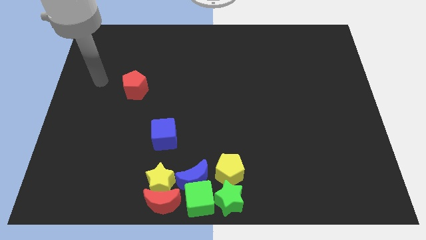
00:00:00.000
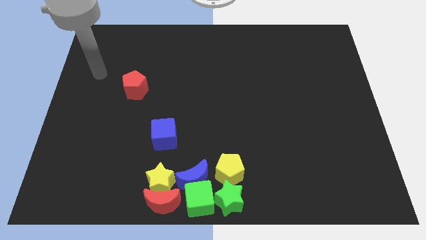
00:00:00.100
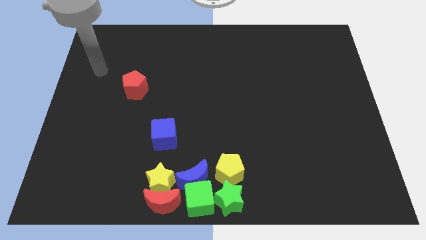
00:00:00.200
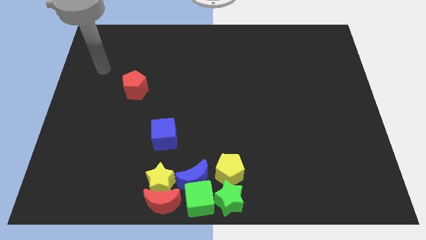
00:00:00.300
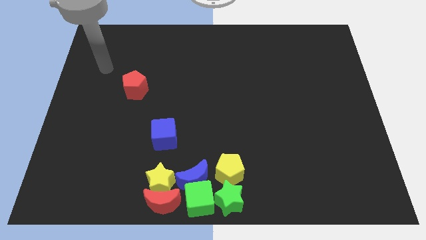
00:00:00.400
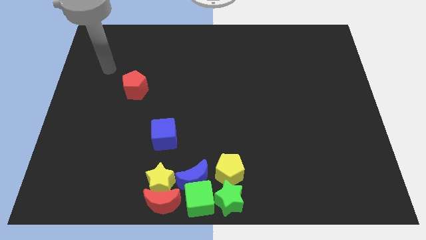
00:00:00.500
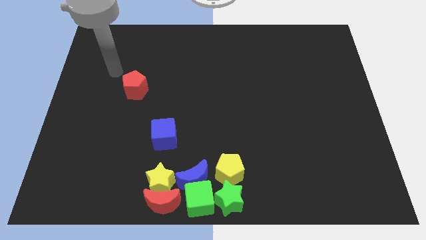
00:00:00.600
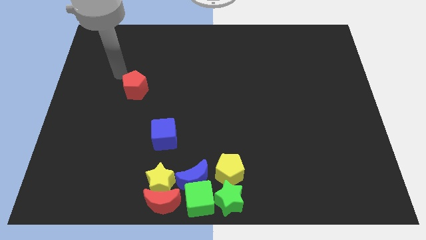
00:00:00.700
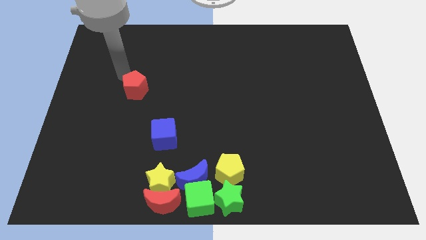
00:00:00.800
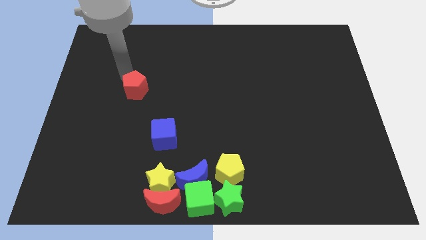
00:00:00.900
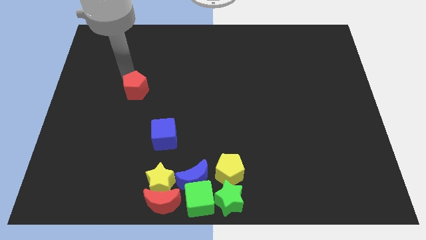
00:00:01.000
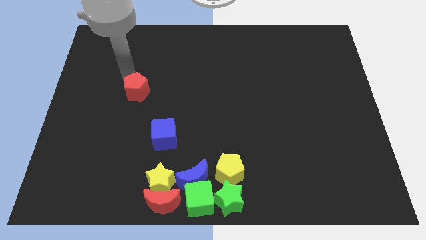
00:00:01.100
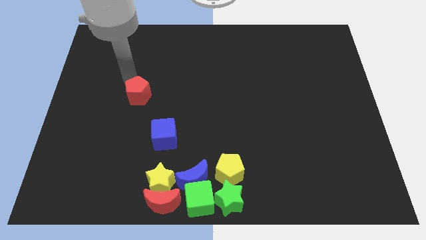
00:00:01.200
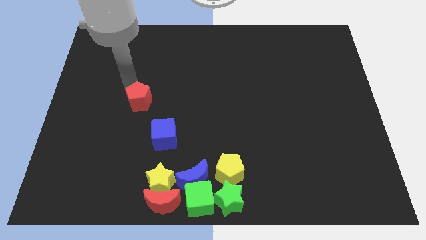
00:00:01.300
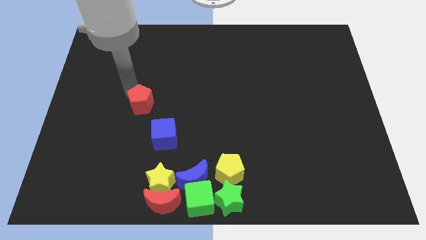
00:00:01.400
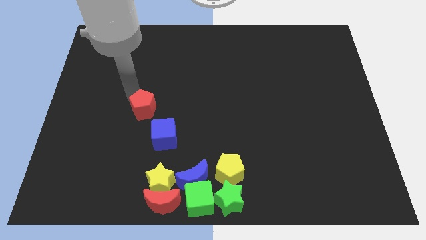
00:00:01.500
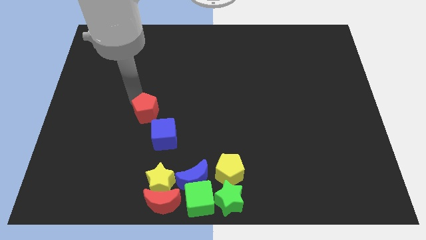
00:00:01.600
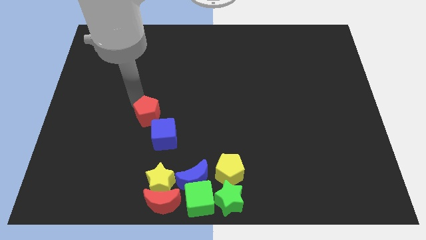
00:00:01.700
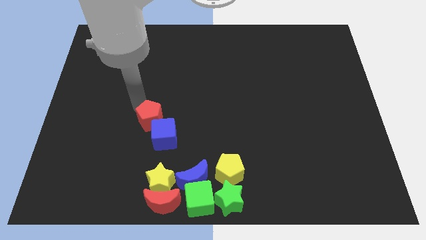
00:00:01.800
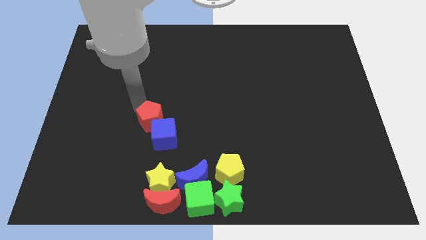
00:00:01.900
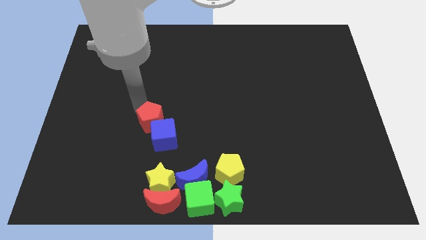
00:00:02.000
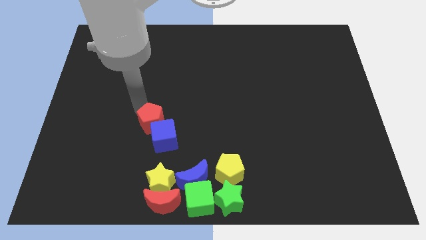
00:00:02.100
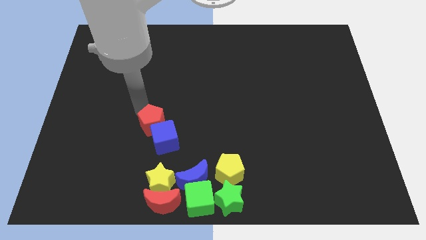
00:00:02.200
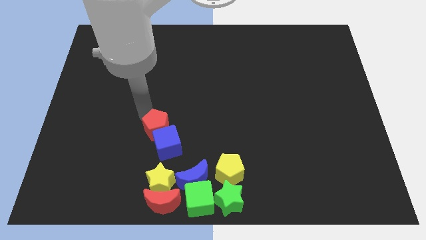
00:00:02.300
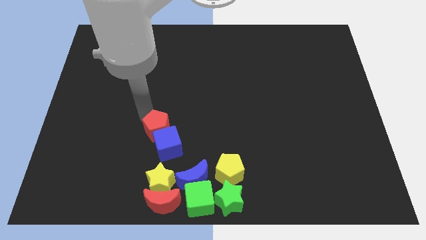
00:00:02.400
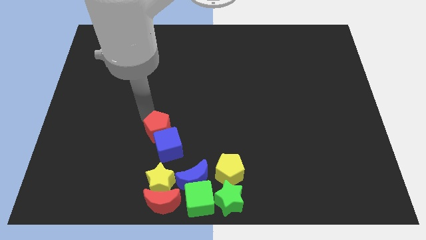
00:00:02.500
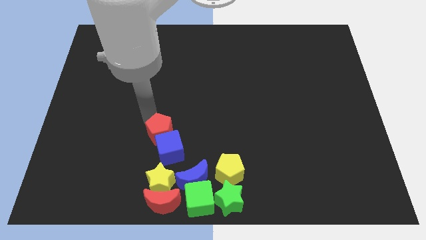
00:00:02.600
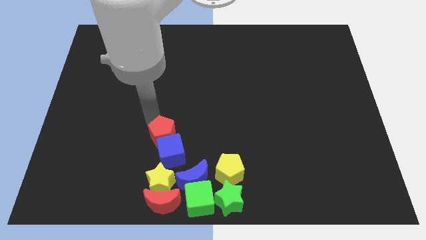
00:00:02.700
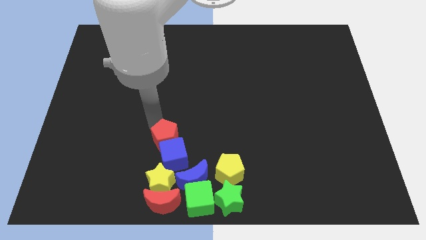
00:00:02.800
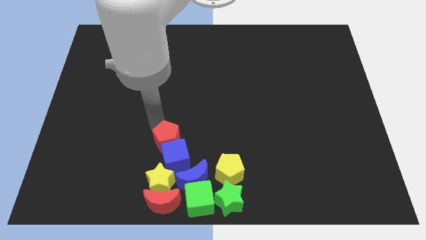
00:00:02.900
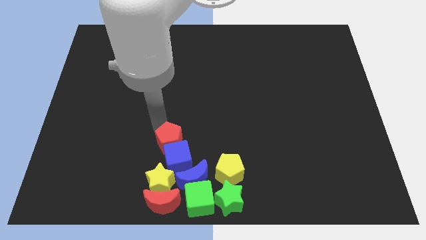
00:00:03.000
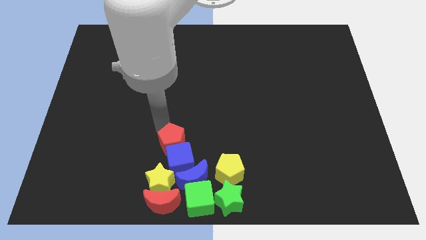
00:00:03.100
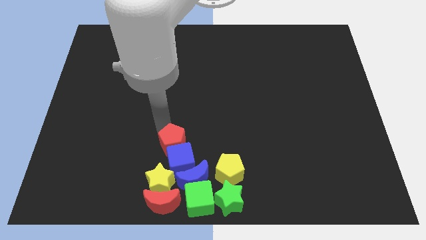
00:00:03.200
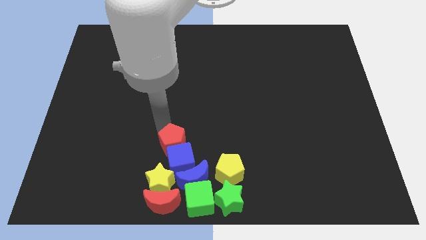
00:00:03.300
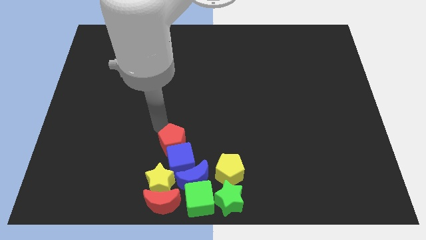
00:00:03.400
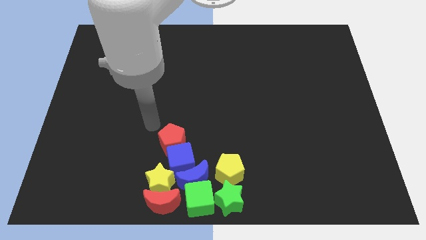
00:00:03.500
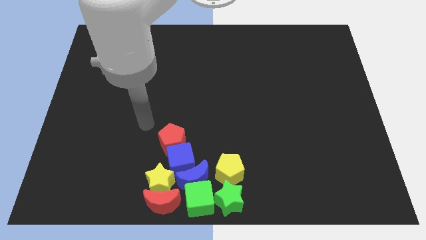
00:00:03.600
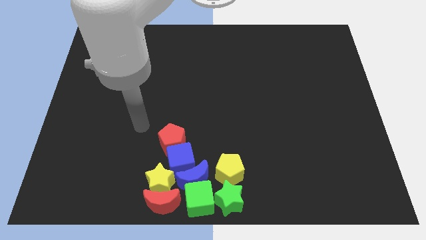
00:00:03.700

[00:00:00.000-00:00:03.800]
move the blue cube with the red pentagon to the bottom center of the board

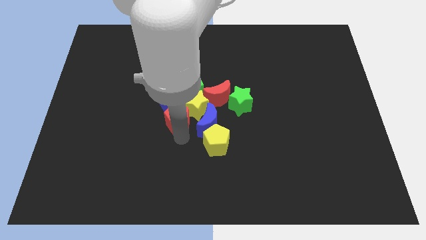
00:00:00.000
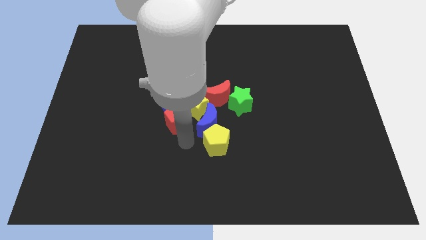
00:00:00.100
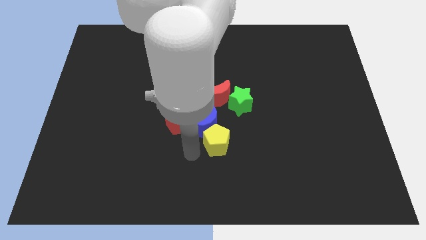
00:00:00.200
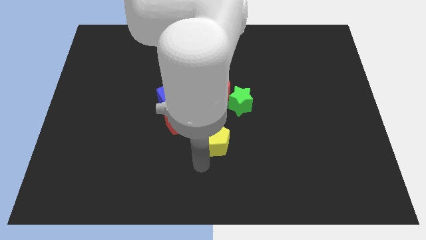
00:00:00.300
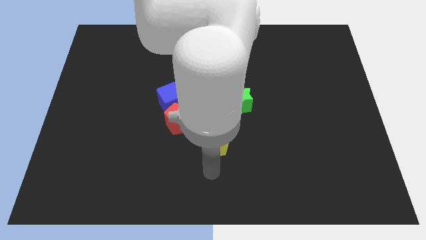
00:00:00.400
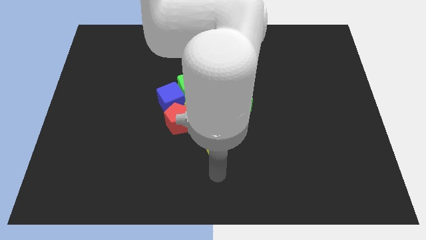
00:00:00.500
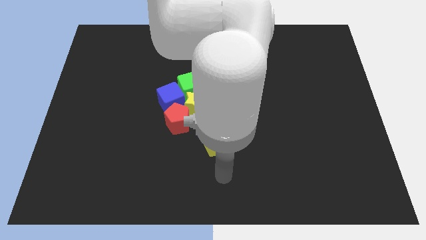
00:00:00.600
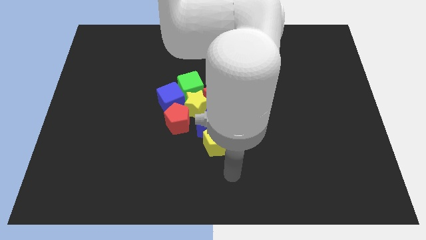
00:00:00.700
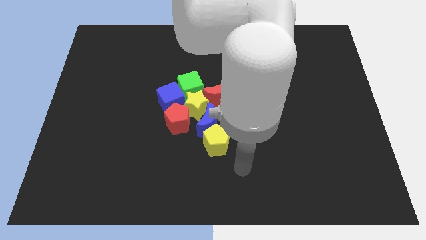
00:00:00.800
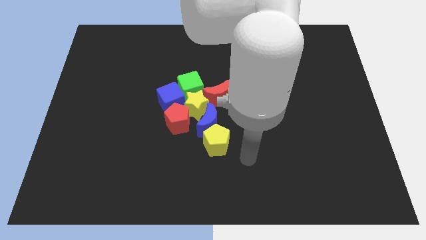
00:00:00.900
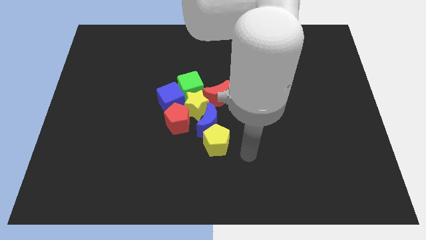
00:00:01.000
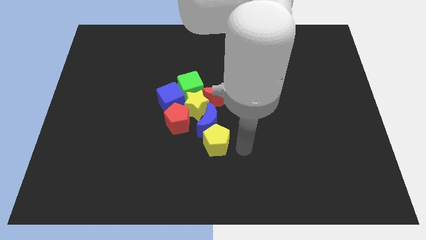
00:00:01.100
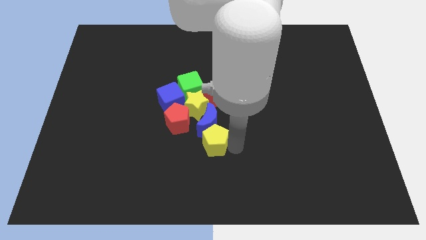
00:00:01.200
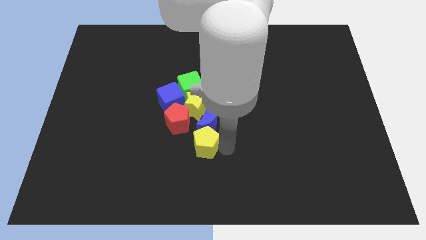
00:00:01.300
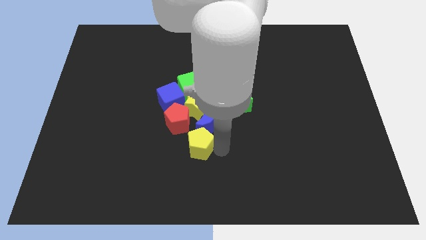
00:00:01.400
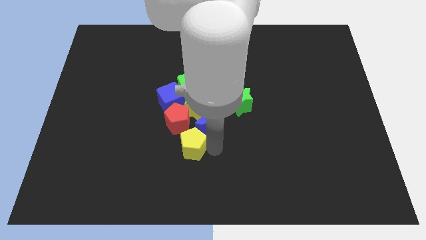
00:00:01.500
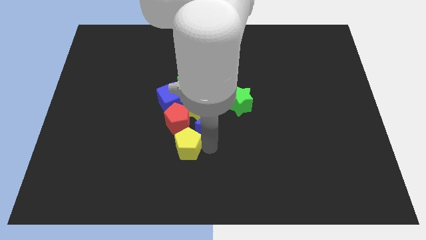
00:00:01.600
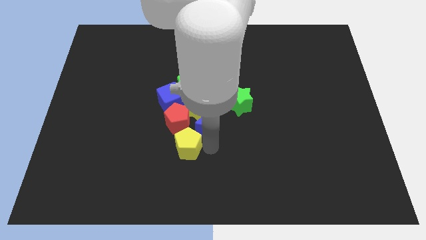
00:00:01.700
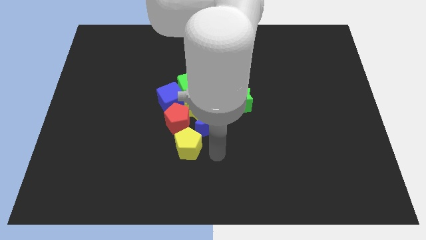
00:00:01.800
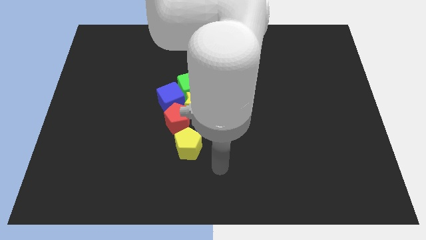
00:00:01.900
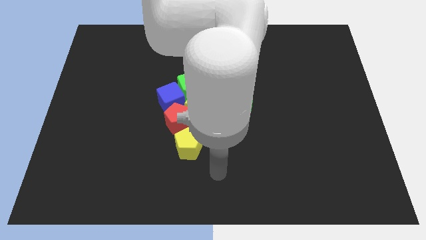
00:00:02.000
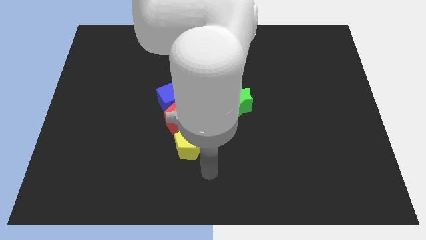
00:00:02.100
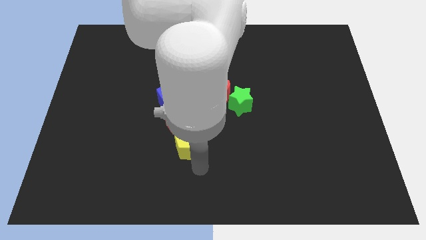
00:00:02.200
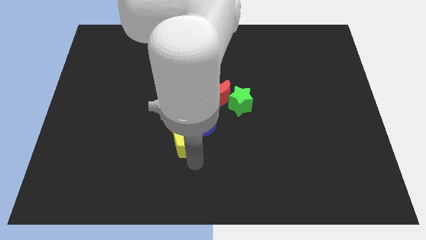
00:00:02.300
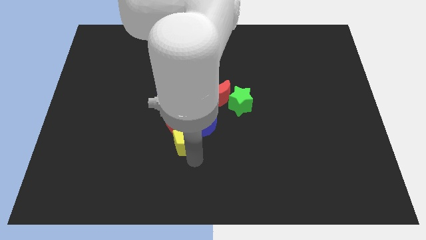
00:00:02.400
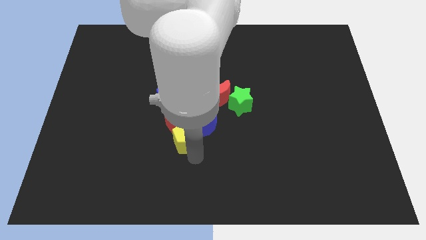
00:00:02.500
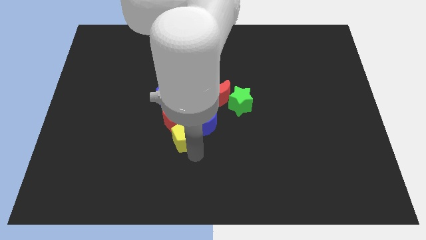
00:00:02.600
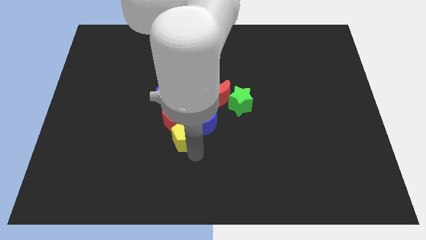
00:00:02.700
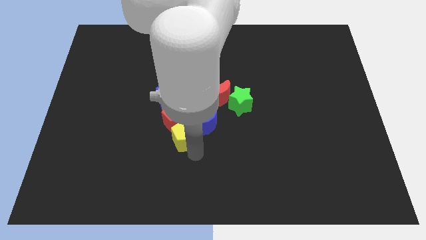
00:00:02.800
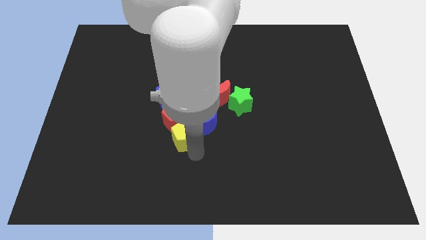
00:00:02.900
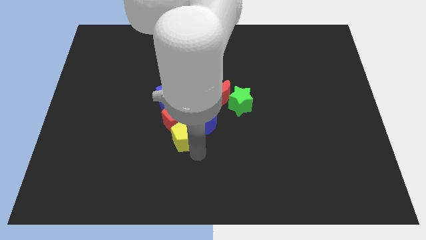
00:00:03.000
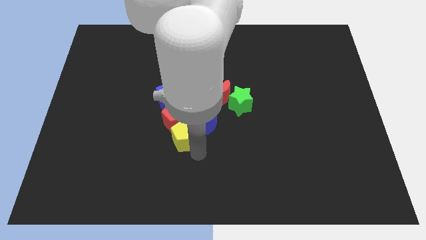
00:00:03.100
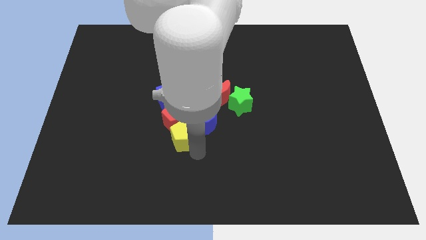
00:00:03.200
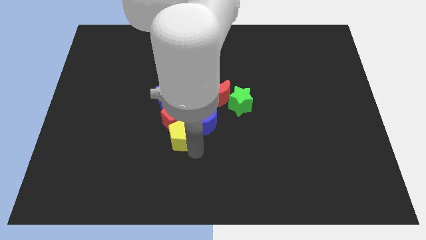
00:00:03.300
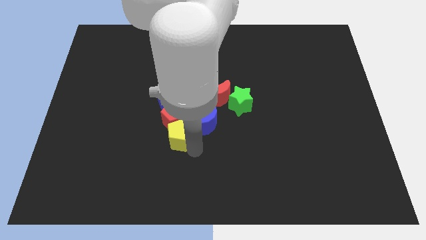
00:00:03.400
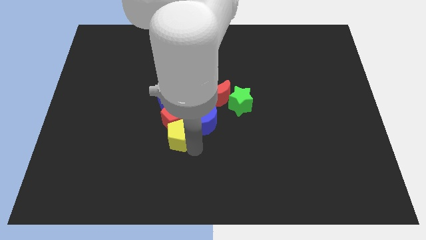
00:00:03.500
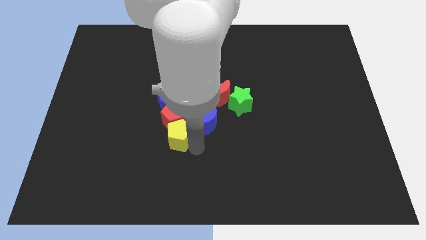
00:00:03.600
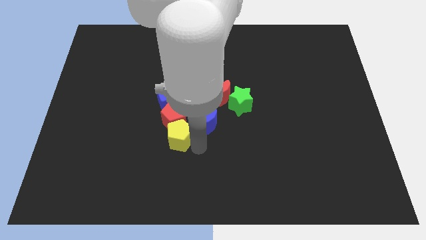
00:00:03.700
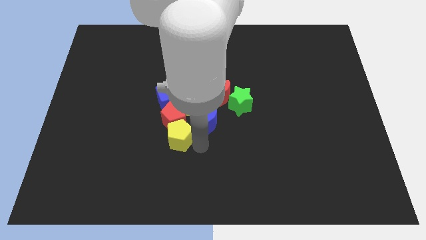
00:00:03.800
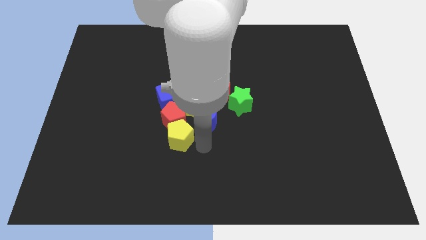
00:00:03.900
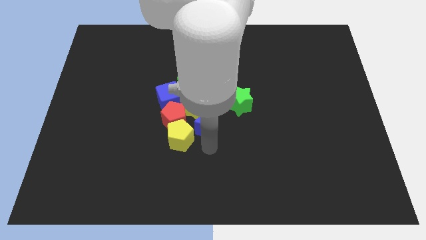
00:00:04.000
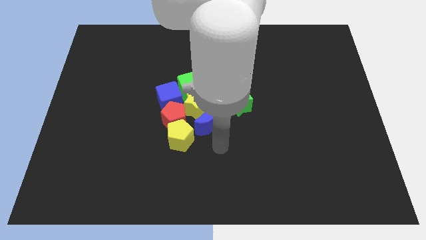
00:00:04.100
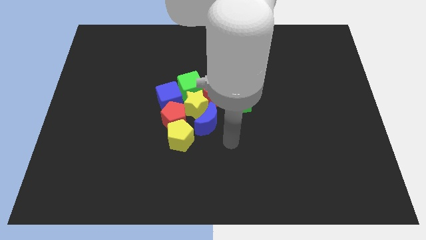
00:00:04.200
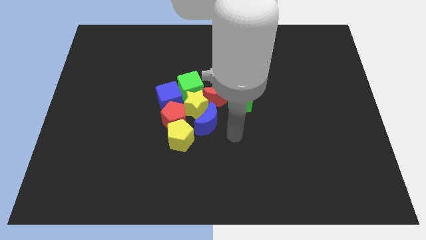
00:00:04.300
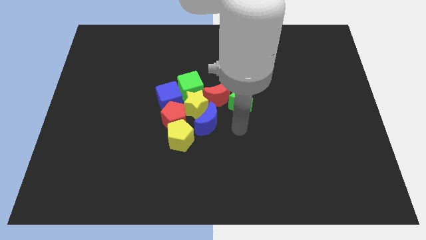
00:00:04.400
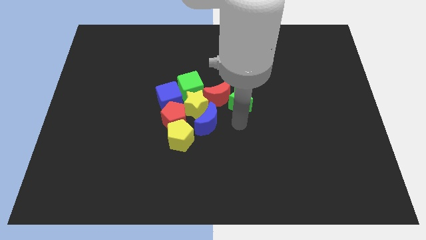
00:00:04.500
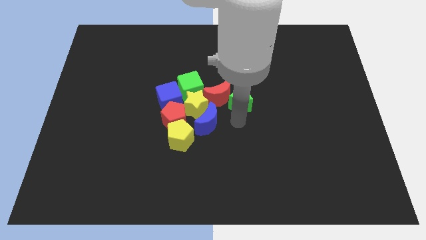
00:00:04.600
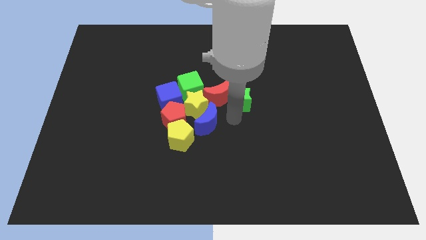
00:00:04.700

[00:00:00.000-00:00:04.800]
push the red pentagon into the yellow pentagon

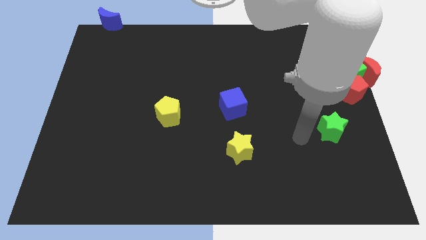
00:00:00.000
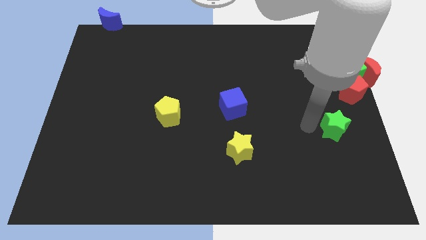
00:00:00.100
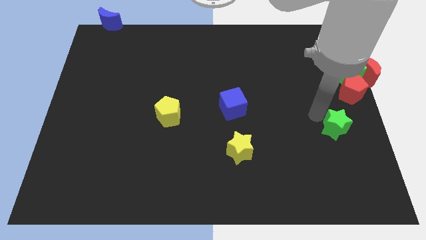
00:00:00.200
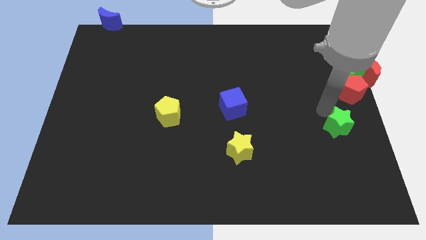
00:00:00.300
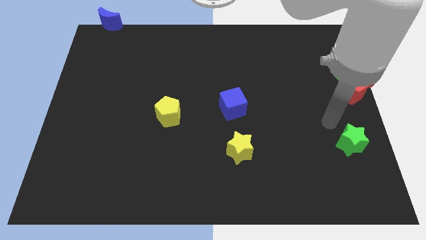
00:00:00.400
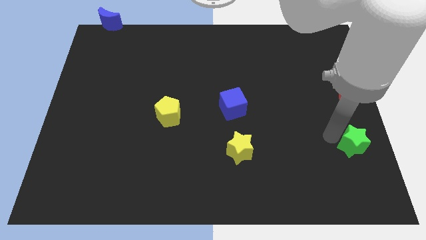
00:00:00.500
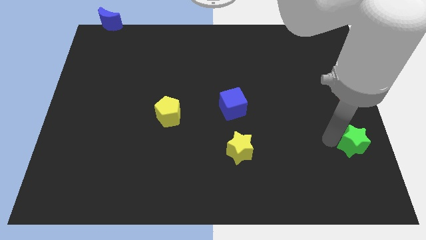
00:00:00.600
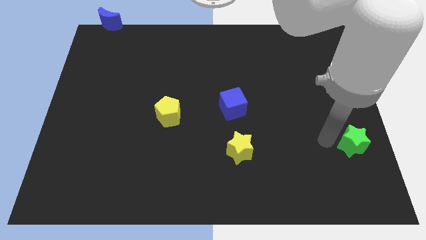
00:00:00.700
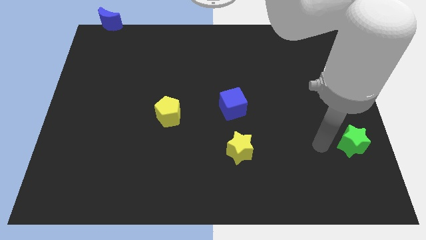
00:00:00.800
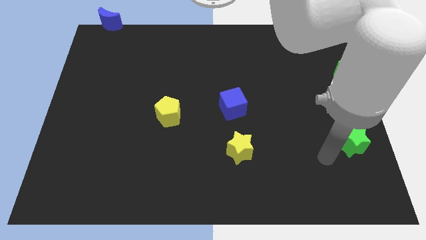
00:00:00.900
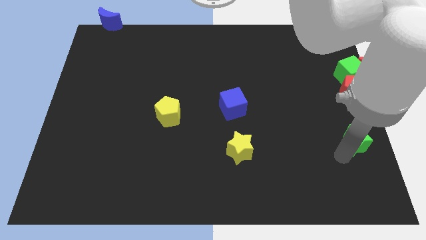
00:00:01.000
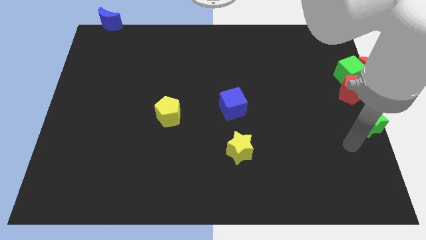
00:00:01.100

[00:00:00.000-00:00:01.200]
move the green star to the right center of the board
